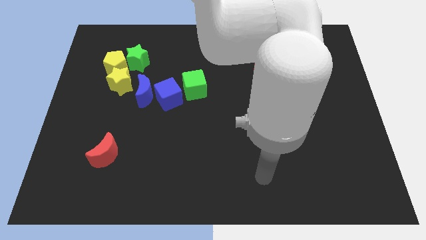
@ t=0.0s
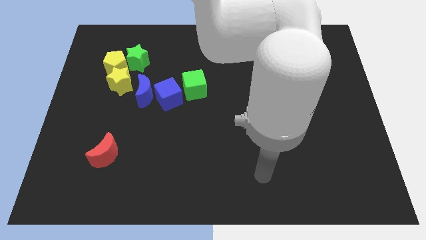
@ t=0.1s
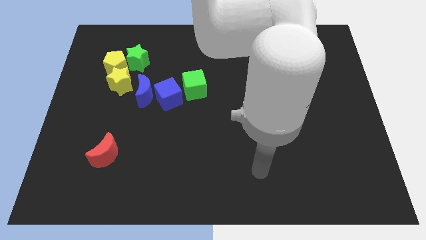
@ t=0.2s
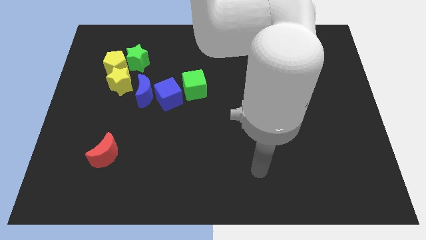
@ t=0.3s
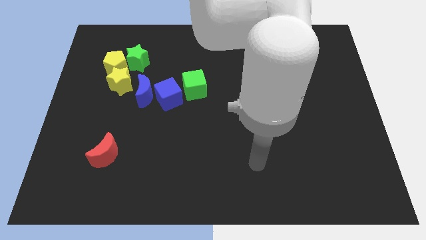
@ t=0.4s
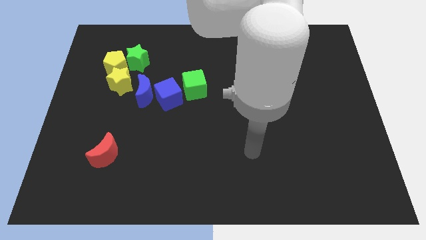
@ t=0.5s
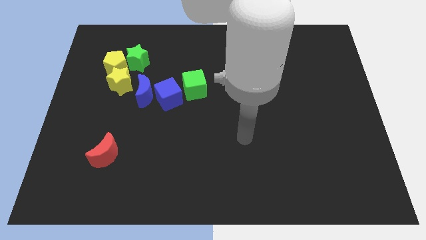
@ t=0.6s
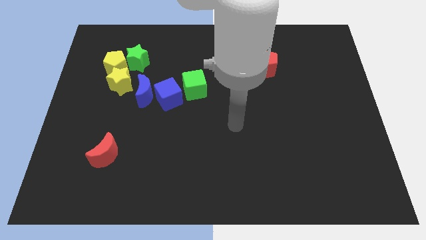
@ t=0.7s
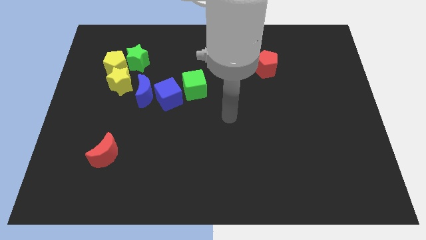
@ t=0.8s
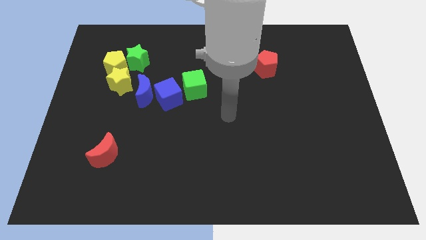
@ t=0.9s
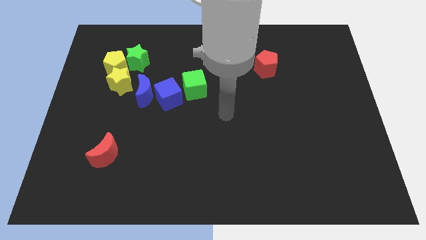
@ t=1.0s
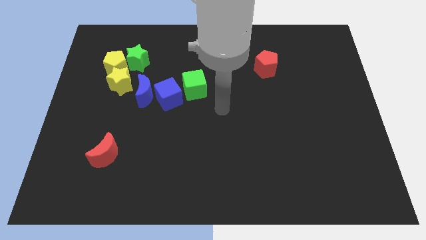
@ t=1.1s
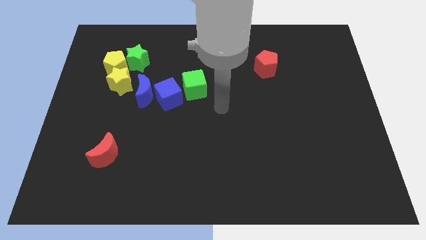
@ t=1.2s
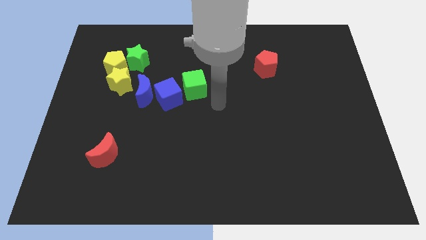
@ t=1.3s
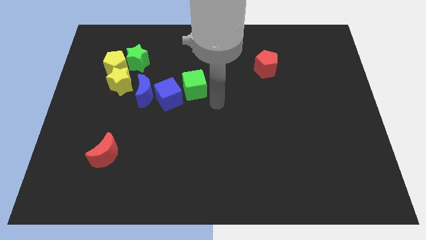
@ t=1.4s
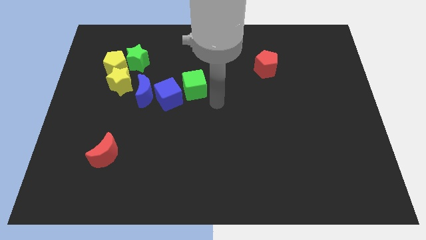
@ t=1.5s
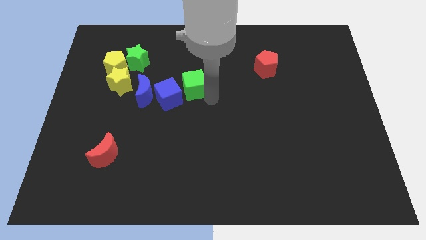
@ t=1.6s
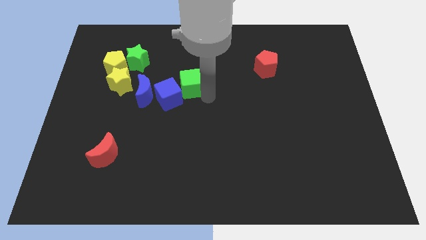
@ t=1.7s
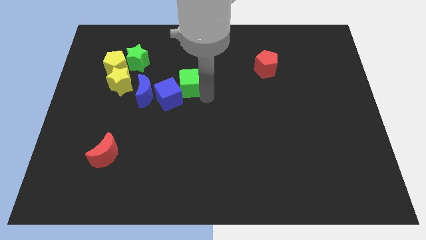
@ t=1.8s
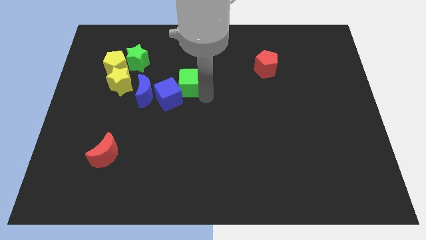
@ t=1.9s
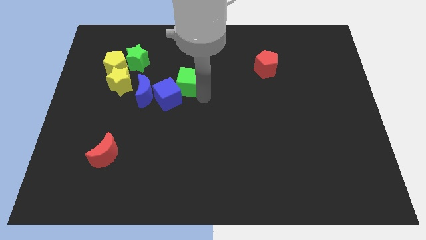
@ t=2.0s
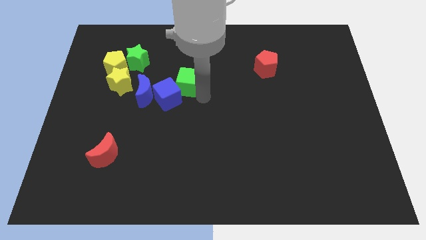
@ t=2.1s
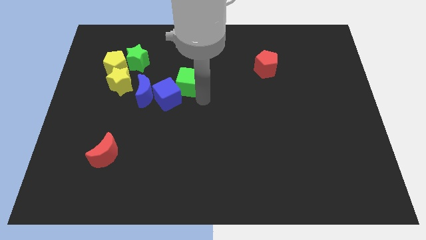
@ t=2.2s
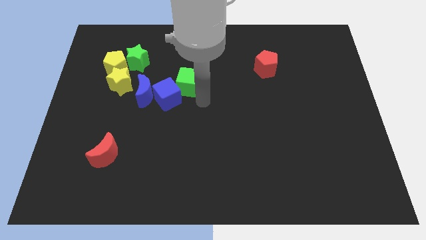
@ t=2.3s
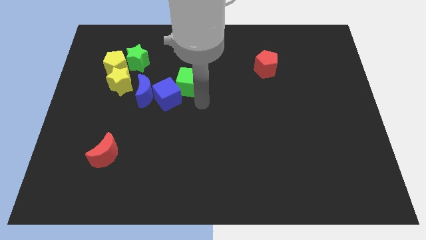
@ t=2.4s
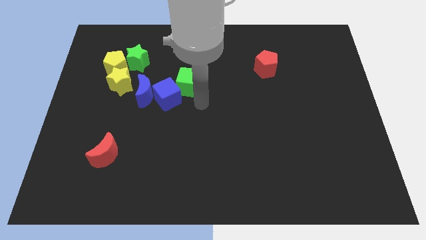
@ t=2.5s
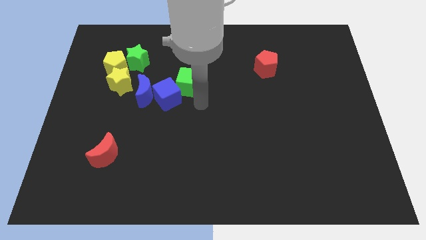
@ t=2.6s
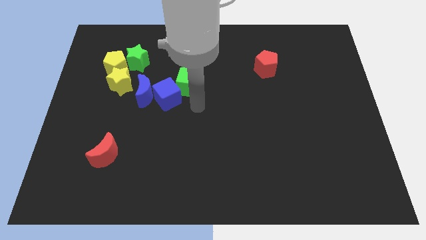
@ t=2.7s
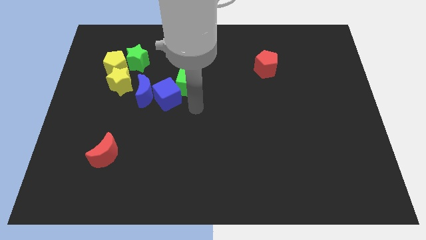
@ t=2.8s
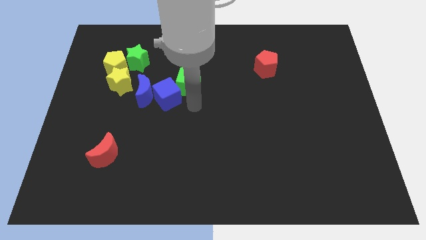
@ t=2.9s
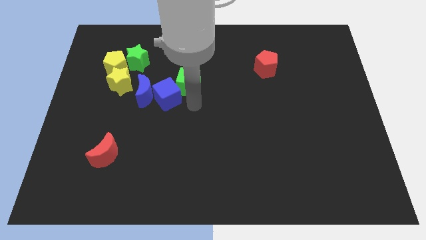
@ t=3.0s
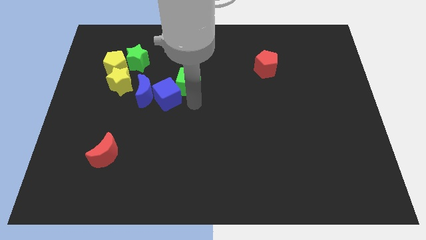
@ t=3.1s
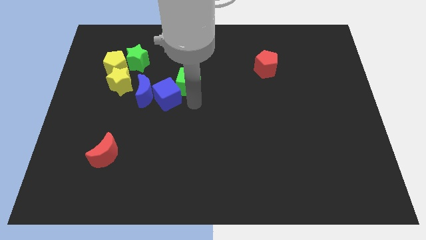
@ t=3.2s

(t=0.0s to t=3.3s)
move your arm to the bottom side of the green cube

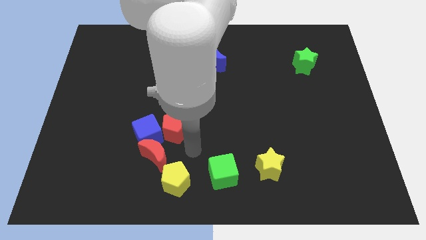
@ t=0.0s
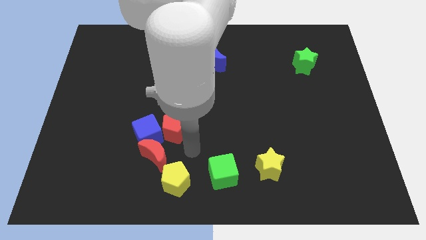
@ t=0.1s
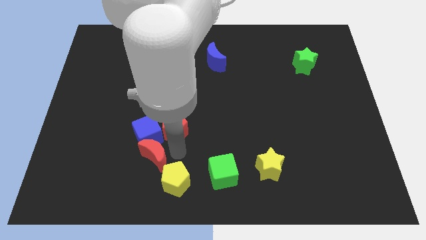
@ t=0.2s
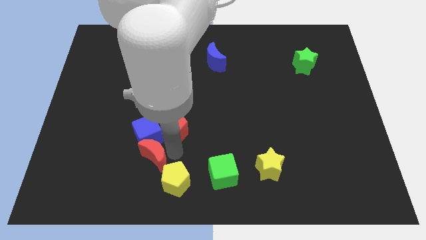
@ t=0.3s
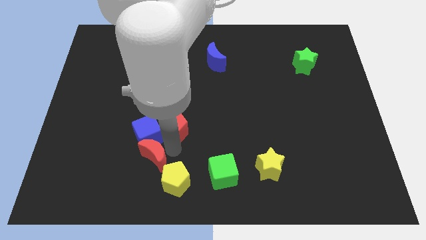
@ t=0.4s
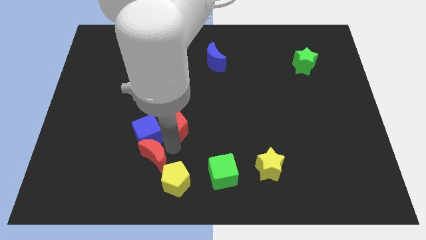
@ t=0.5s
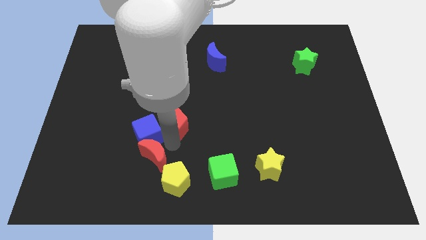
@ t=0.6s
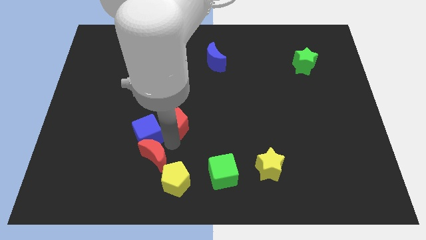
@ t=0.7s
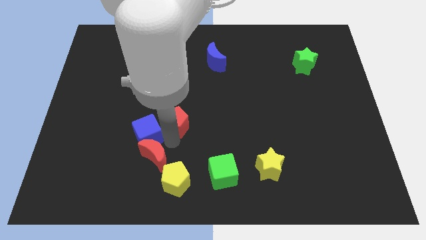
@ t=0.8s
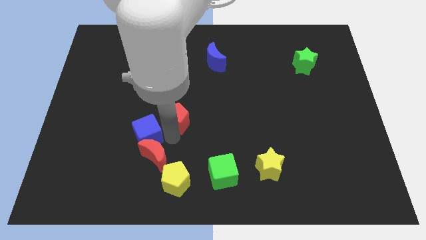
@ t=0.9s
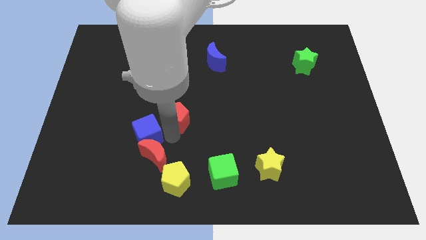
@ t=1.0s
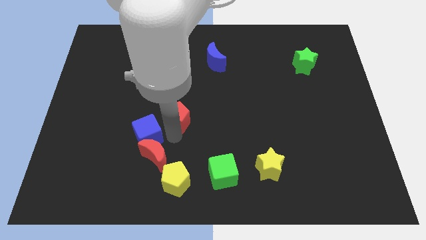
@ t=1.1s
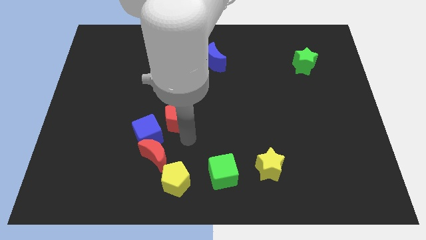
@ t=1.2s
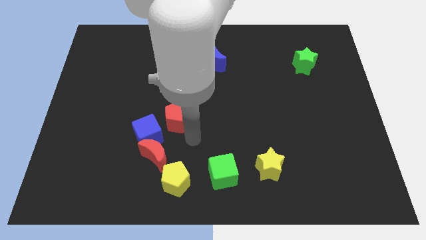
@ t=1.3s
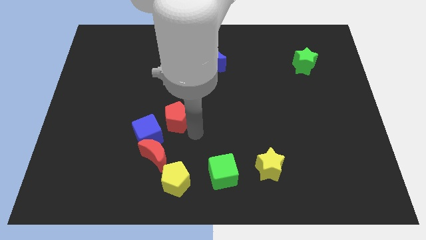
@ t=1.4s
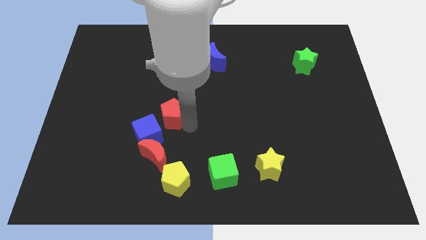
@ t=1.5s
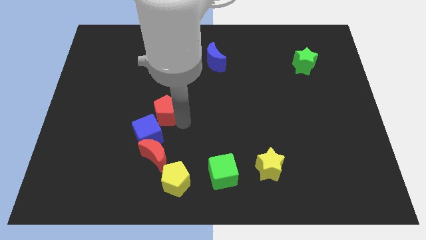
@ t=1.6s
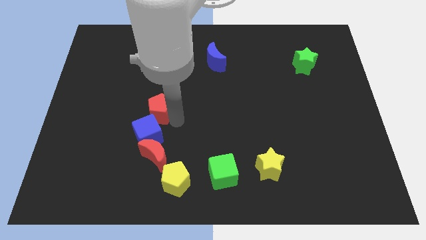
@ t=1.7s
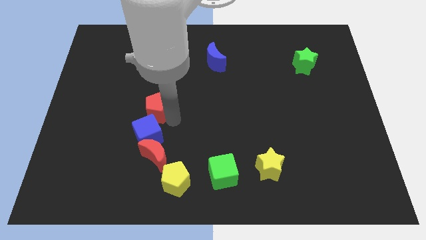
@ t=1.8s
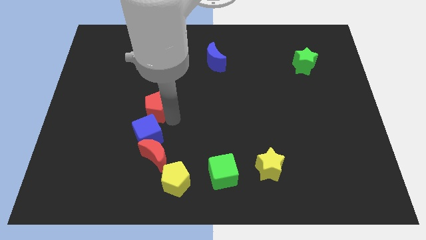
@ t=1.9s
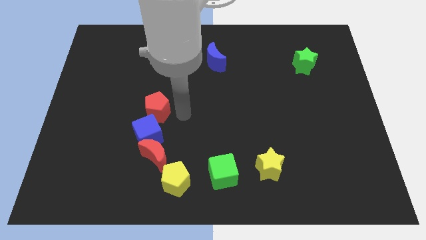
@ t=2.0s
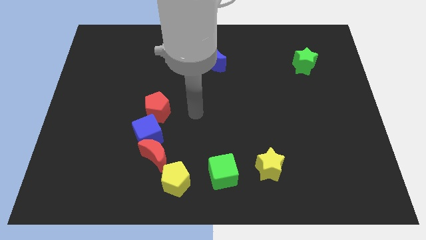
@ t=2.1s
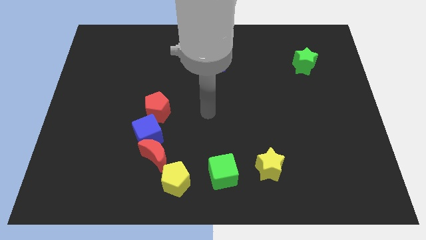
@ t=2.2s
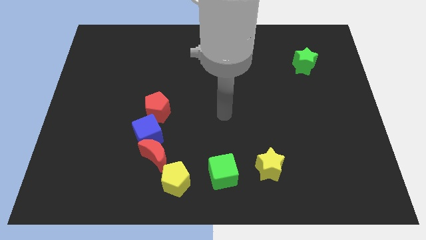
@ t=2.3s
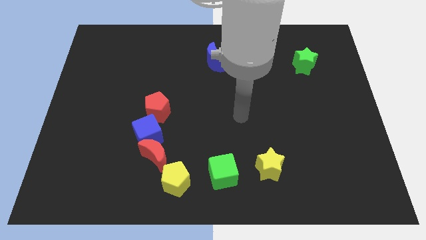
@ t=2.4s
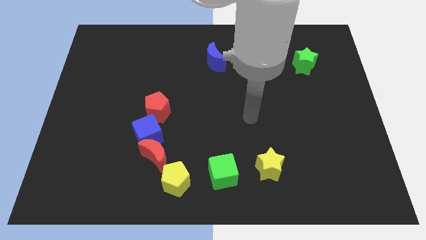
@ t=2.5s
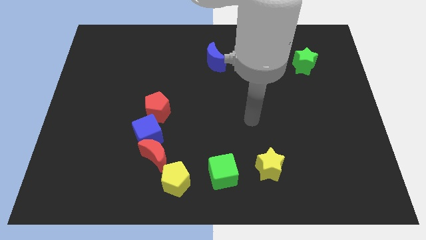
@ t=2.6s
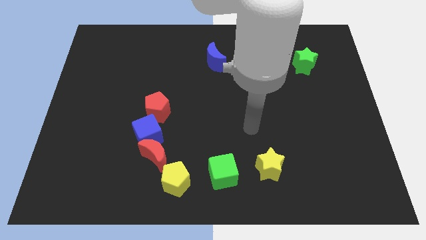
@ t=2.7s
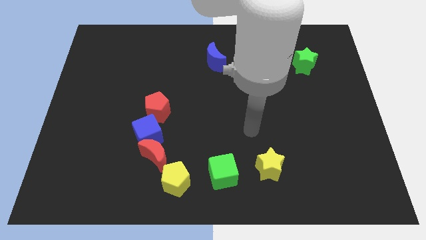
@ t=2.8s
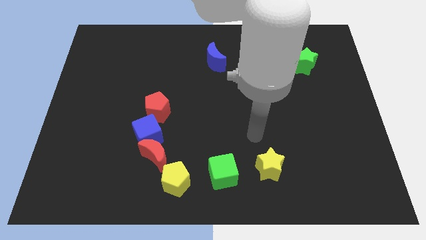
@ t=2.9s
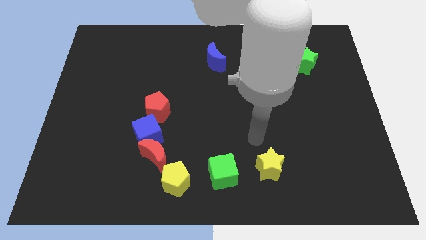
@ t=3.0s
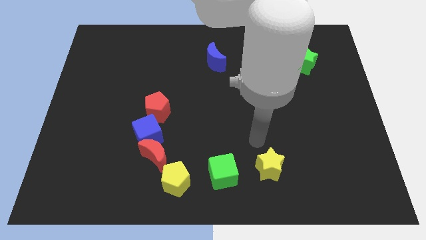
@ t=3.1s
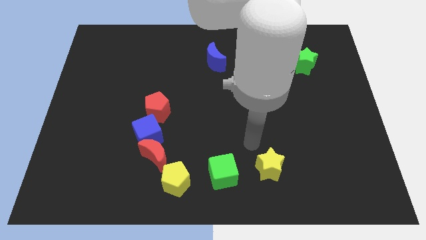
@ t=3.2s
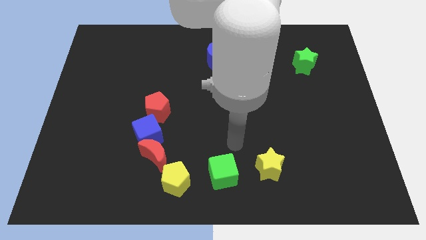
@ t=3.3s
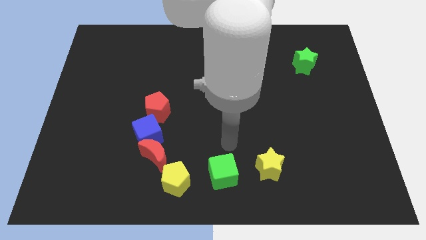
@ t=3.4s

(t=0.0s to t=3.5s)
place the red pentagon above the blue cube

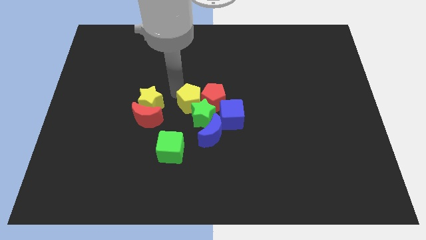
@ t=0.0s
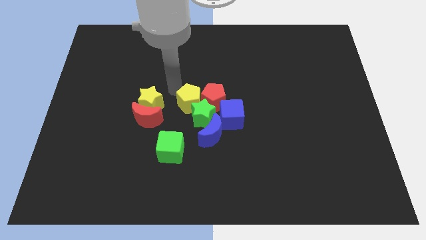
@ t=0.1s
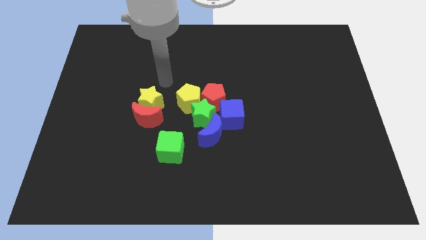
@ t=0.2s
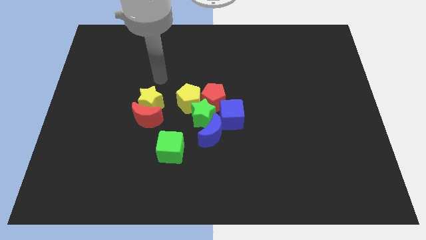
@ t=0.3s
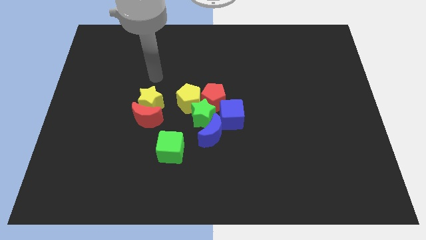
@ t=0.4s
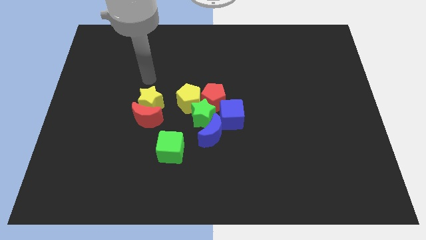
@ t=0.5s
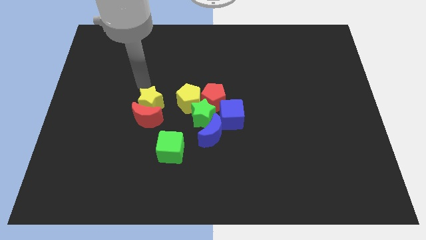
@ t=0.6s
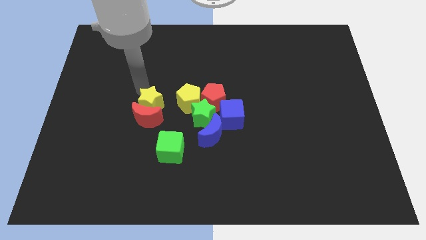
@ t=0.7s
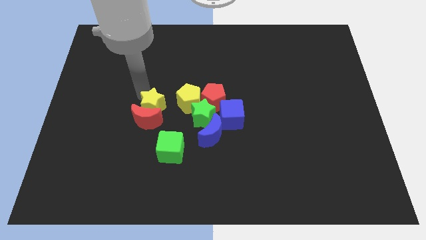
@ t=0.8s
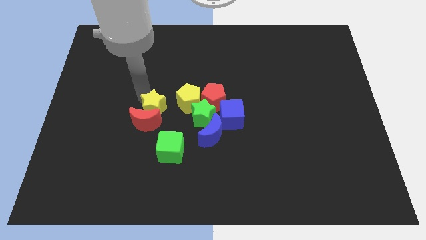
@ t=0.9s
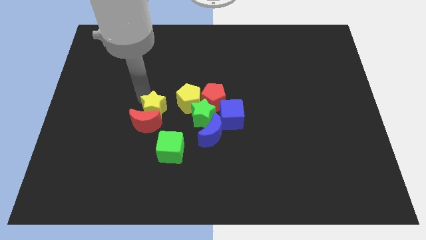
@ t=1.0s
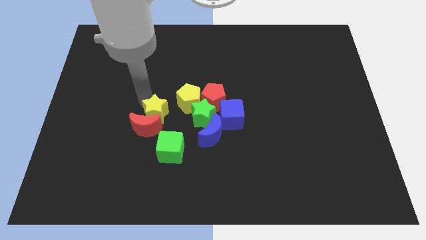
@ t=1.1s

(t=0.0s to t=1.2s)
move your arm away from the yellow pentagon

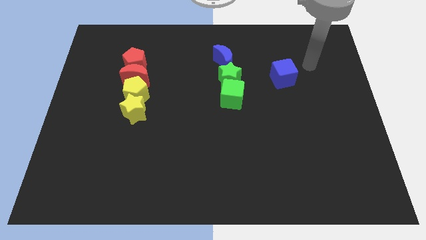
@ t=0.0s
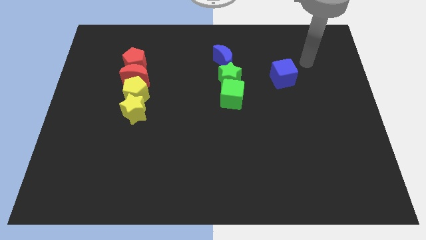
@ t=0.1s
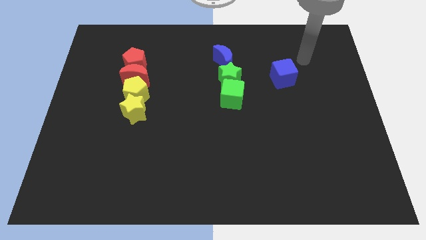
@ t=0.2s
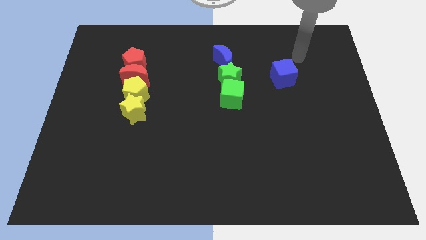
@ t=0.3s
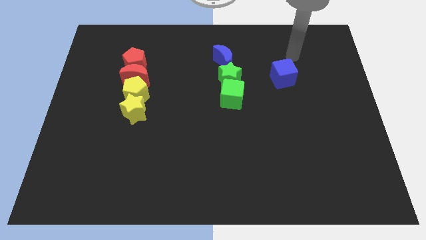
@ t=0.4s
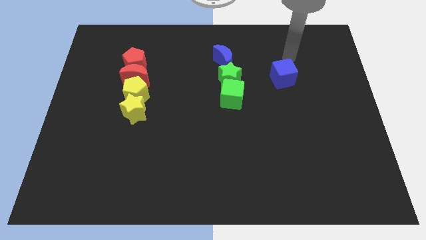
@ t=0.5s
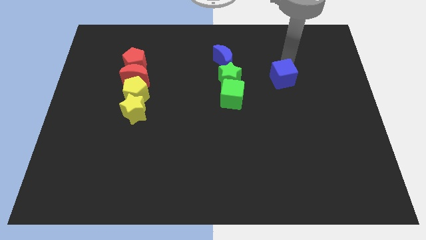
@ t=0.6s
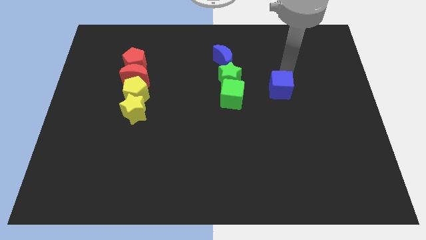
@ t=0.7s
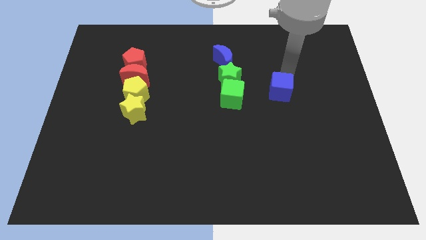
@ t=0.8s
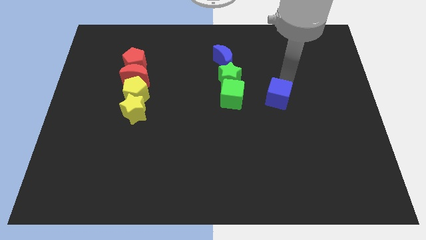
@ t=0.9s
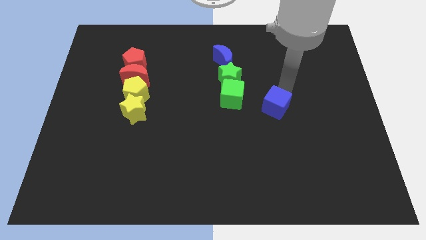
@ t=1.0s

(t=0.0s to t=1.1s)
move the blue cube slightly to the bottom
